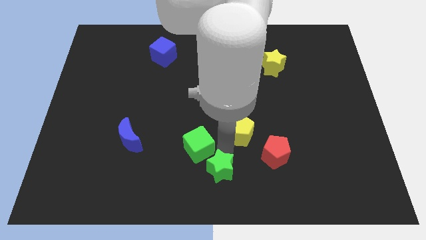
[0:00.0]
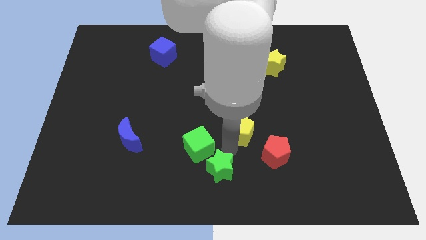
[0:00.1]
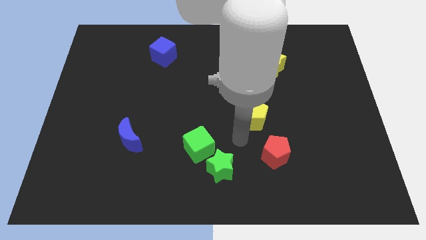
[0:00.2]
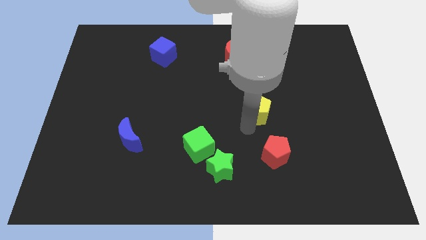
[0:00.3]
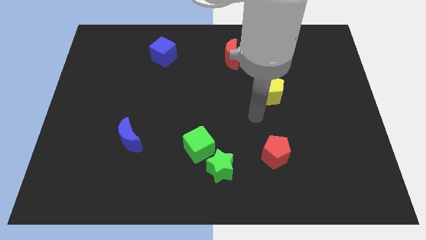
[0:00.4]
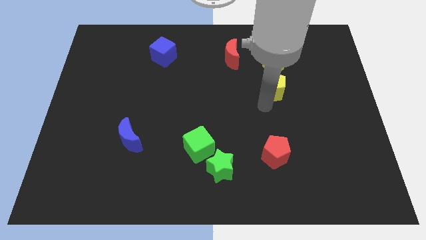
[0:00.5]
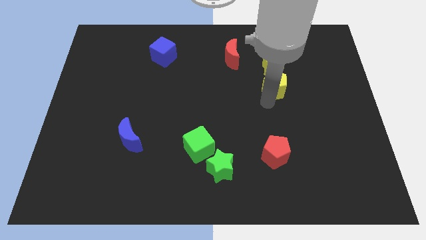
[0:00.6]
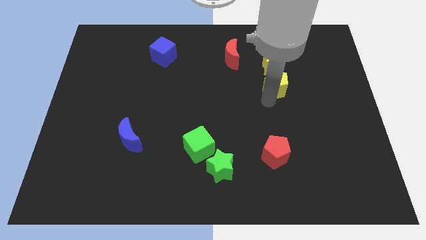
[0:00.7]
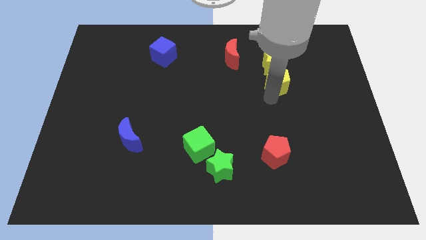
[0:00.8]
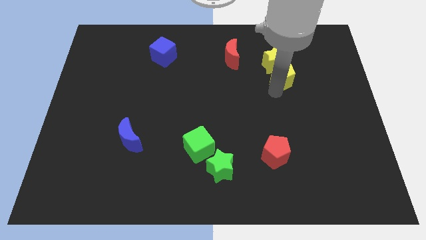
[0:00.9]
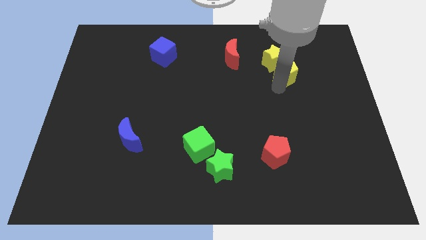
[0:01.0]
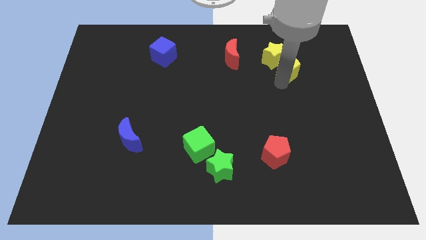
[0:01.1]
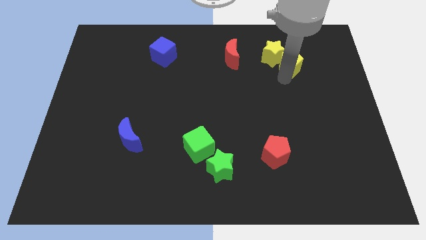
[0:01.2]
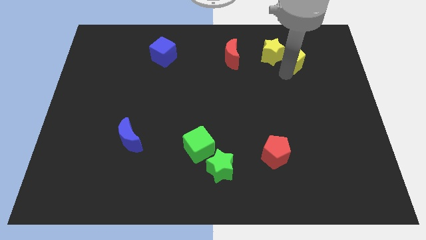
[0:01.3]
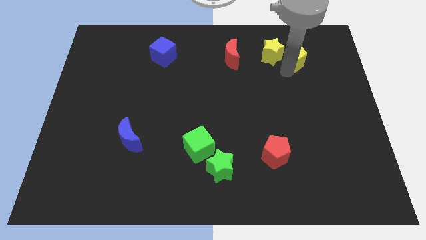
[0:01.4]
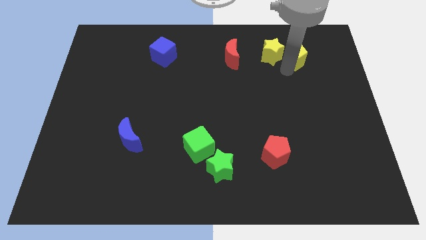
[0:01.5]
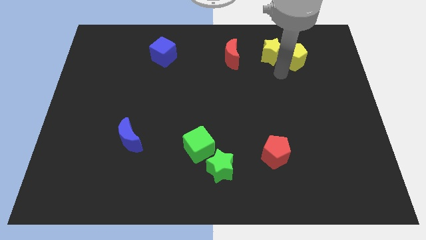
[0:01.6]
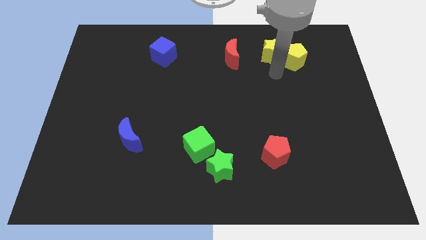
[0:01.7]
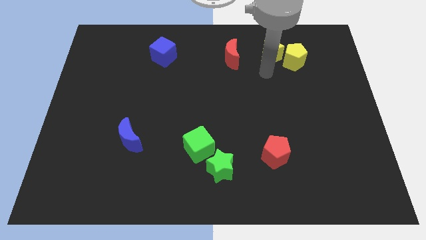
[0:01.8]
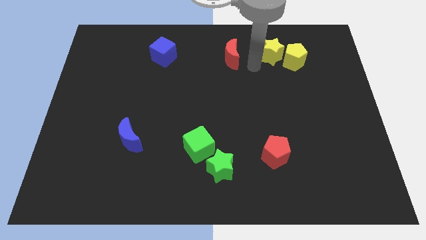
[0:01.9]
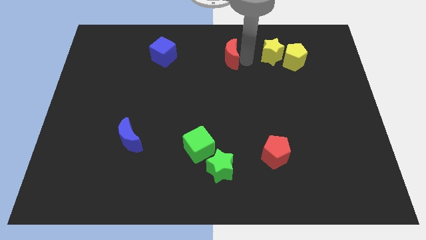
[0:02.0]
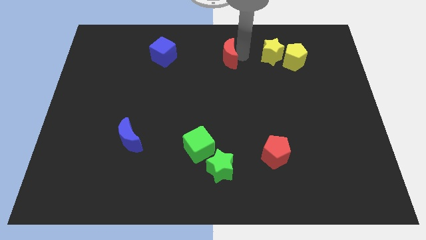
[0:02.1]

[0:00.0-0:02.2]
place the yellow pentagon to the right side of the yellow star

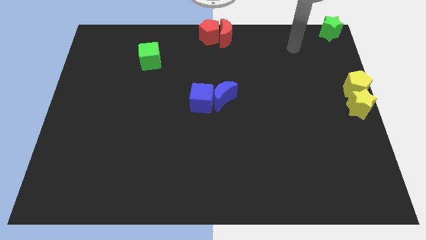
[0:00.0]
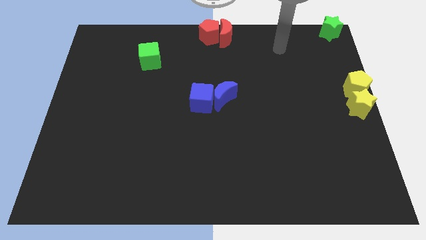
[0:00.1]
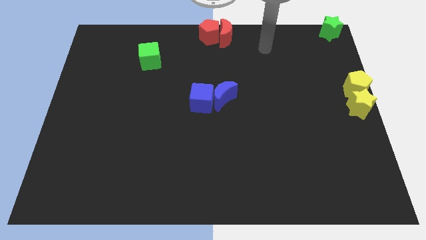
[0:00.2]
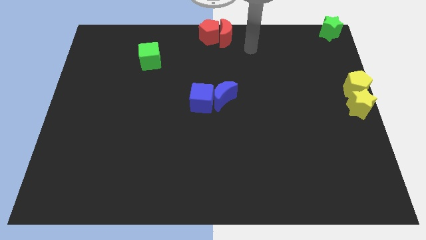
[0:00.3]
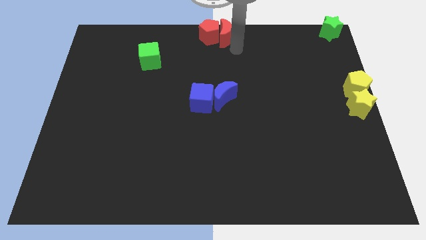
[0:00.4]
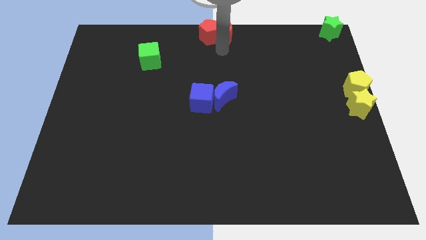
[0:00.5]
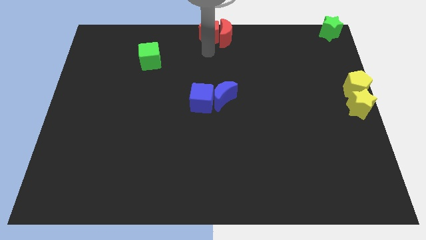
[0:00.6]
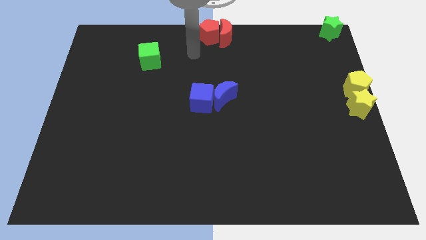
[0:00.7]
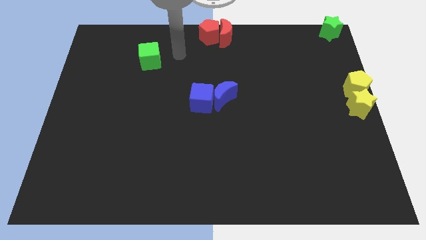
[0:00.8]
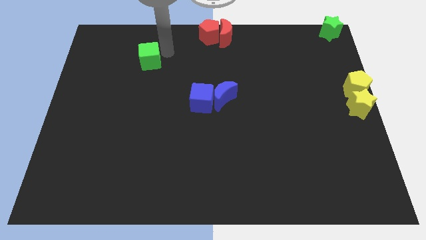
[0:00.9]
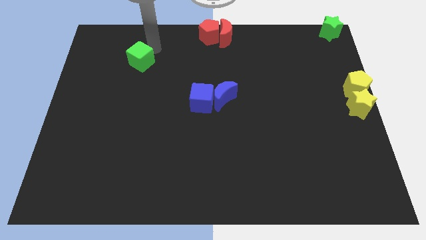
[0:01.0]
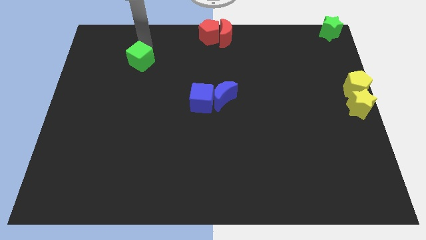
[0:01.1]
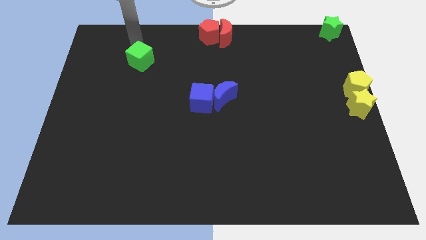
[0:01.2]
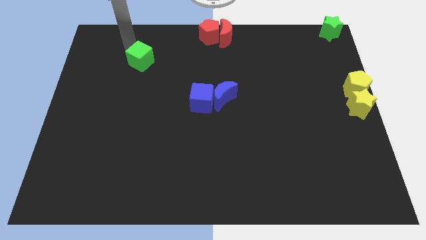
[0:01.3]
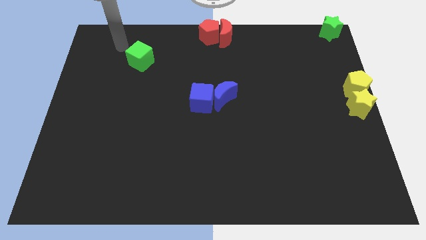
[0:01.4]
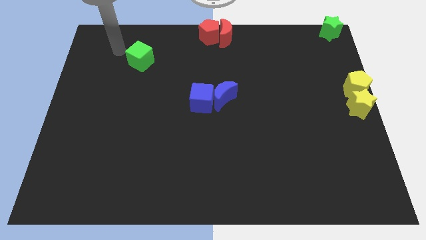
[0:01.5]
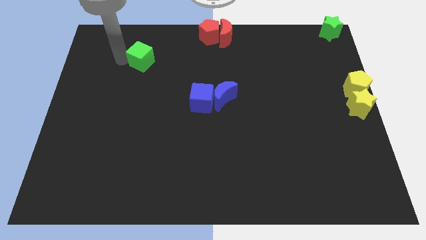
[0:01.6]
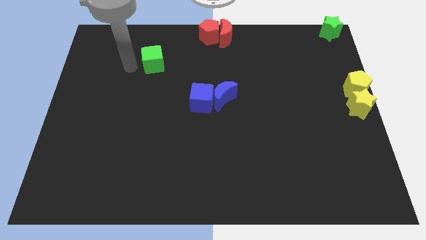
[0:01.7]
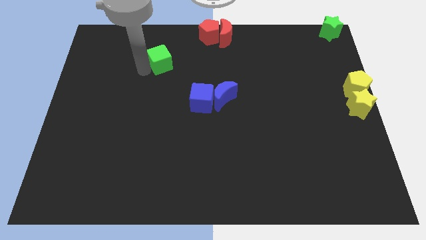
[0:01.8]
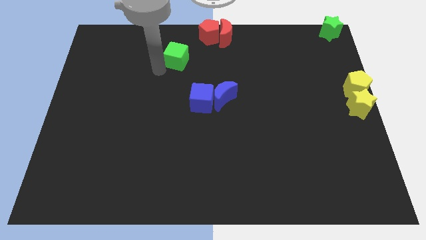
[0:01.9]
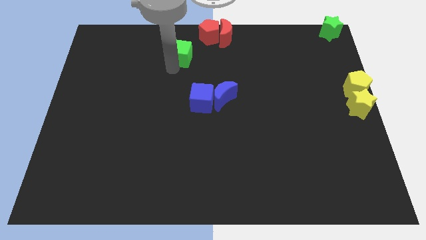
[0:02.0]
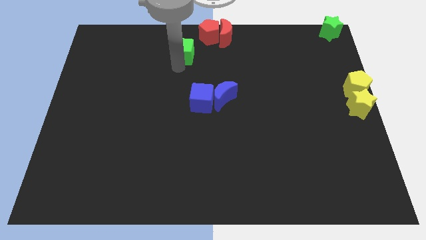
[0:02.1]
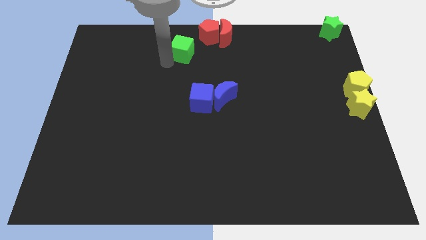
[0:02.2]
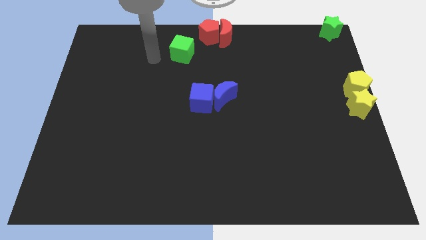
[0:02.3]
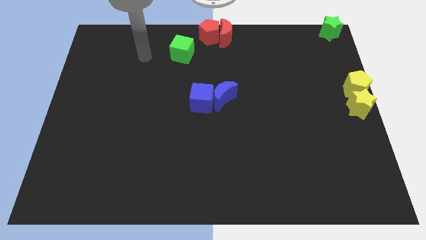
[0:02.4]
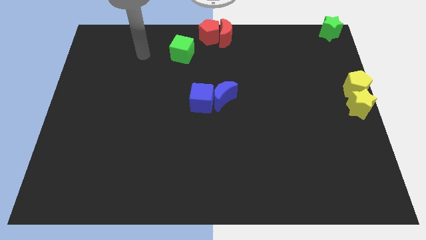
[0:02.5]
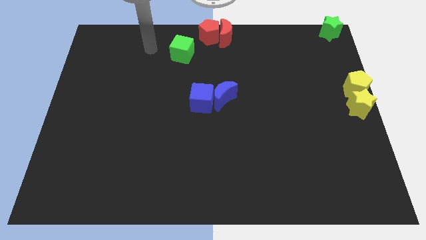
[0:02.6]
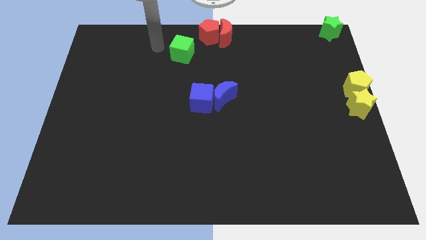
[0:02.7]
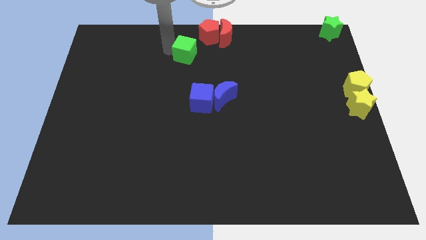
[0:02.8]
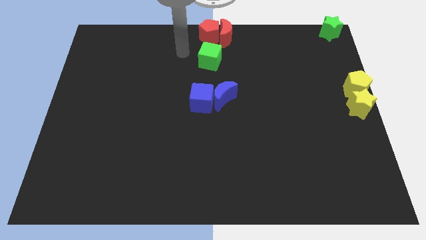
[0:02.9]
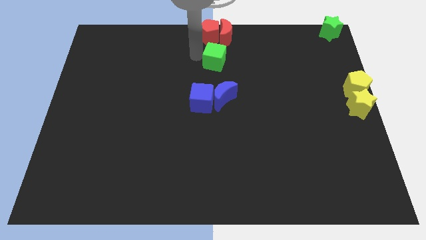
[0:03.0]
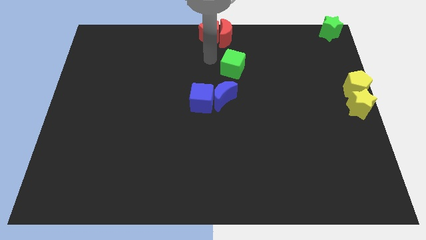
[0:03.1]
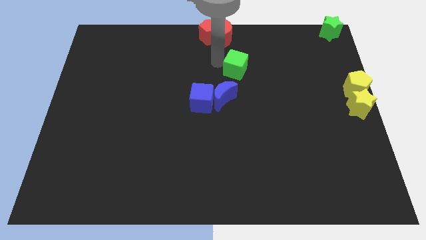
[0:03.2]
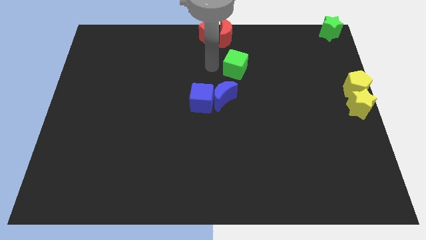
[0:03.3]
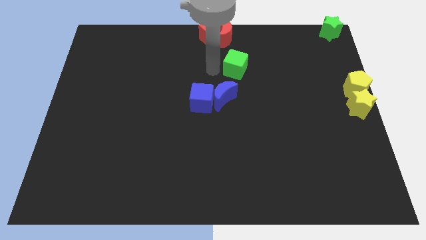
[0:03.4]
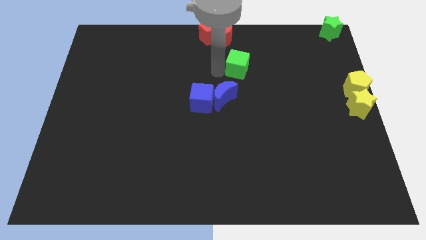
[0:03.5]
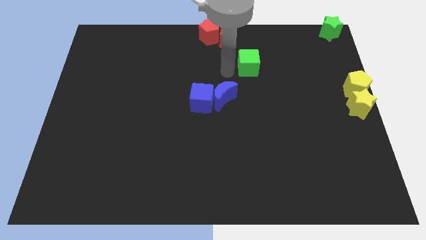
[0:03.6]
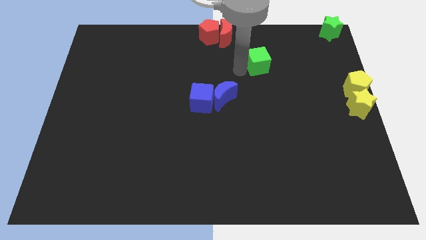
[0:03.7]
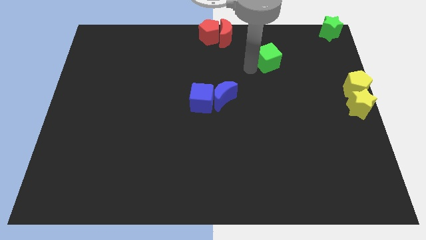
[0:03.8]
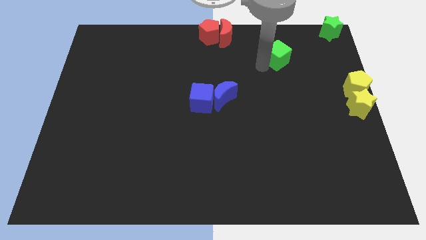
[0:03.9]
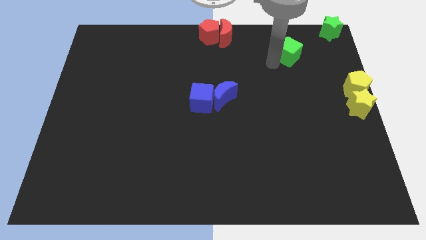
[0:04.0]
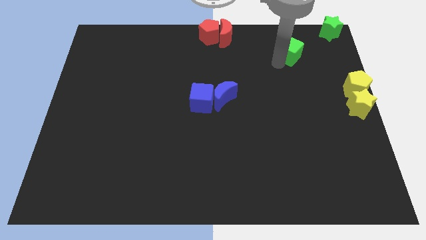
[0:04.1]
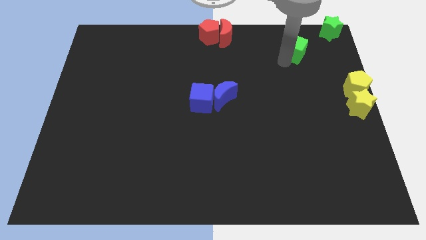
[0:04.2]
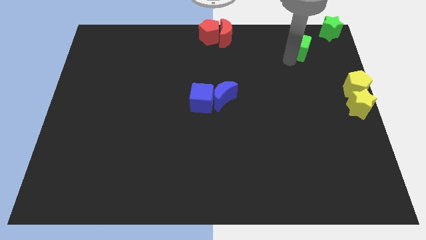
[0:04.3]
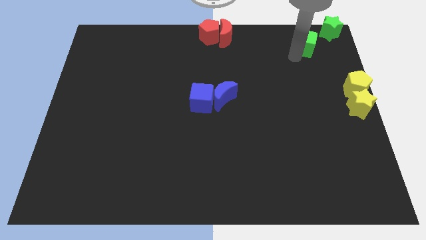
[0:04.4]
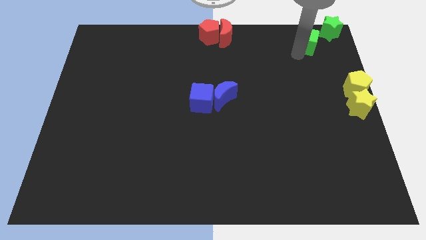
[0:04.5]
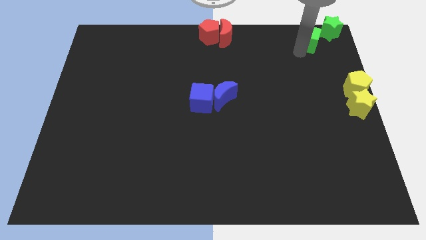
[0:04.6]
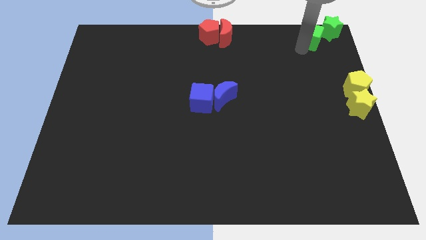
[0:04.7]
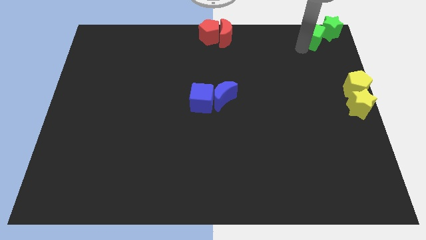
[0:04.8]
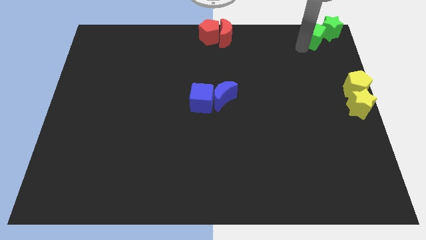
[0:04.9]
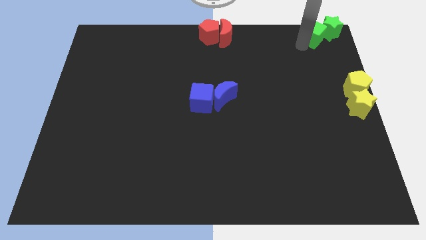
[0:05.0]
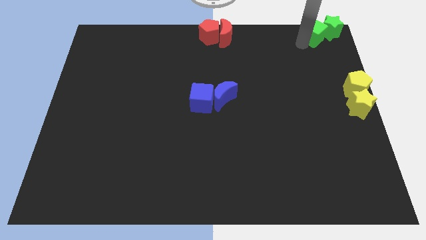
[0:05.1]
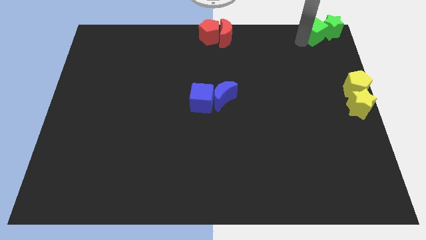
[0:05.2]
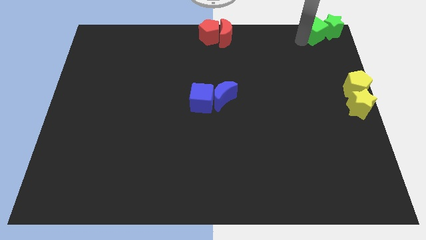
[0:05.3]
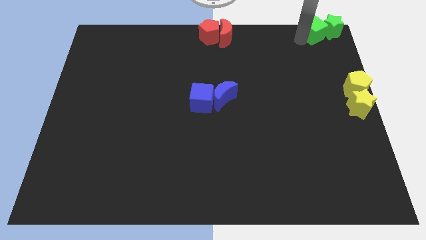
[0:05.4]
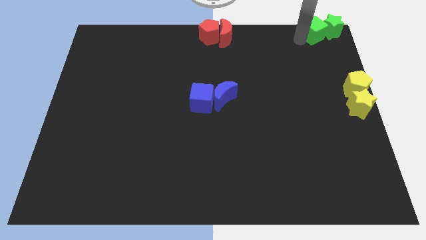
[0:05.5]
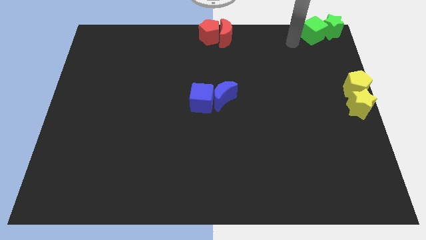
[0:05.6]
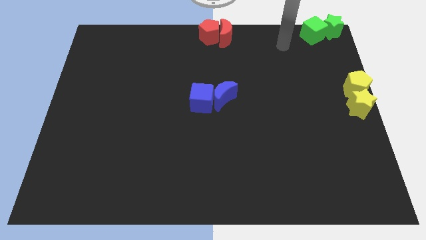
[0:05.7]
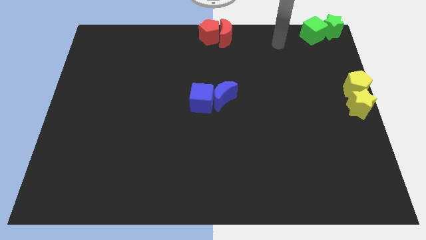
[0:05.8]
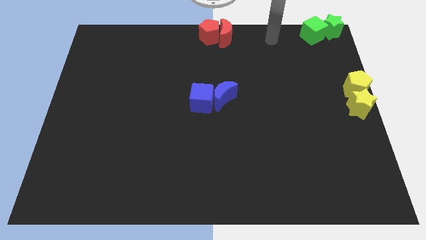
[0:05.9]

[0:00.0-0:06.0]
push the green cube into the green star

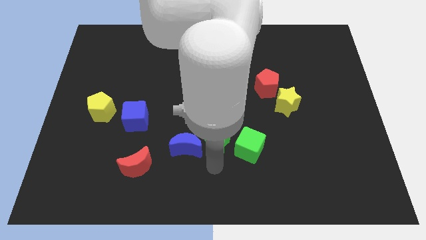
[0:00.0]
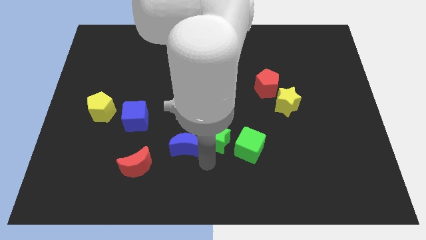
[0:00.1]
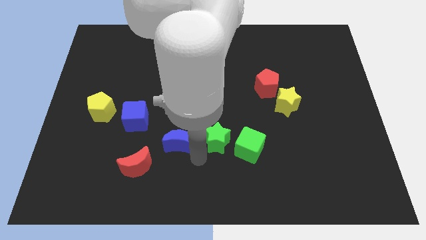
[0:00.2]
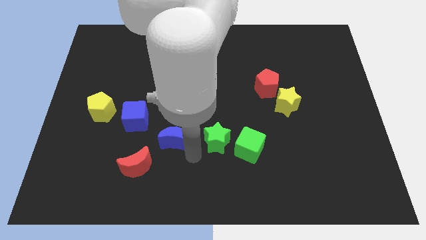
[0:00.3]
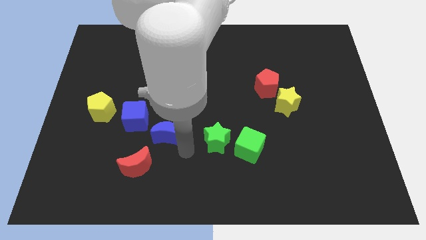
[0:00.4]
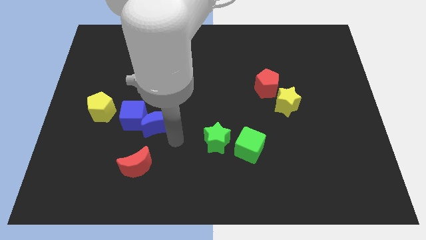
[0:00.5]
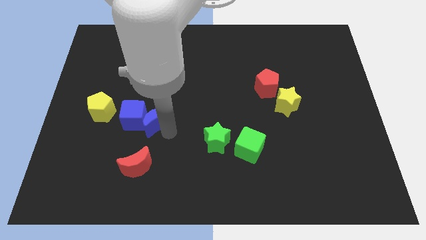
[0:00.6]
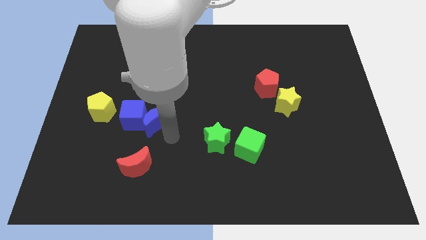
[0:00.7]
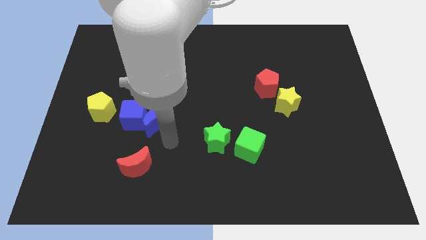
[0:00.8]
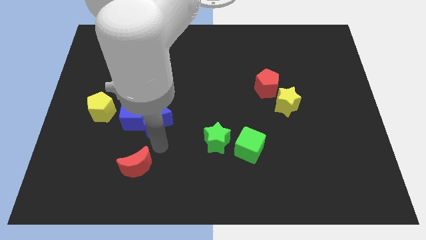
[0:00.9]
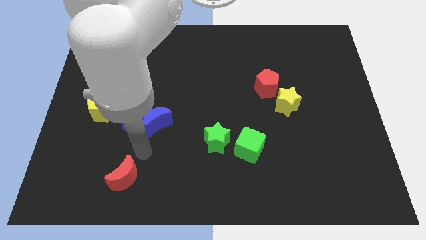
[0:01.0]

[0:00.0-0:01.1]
make the blue crescent to touch the right side of the blue cube
